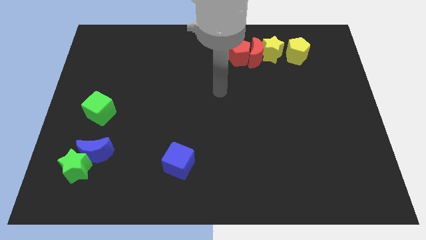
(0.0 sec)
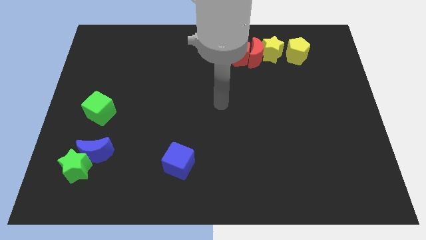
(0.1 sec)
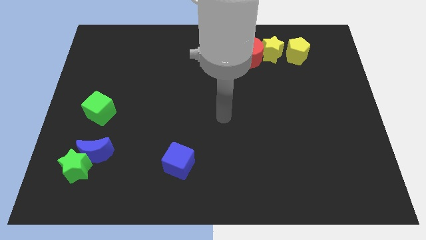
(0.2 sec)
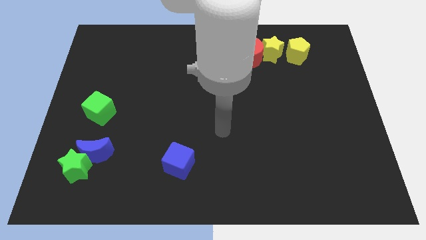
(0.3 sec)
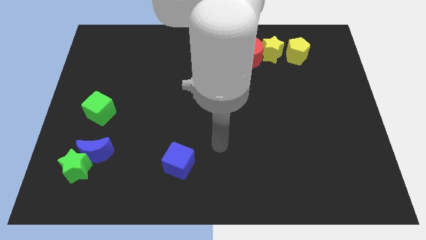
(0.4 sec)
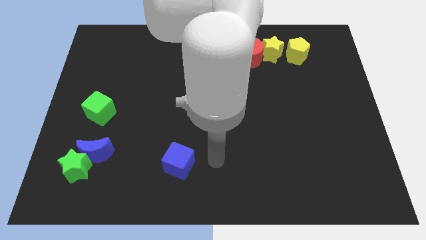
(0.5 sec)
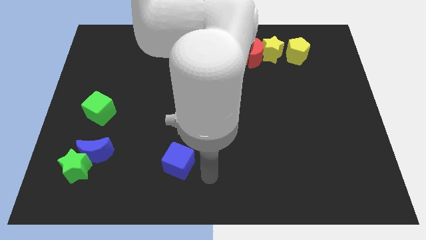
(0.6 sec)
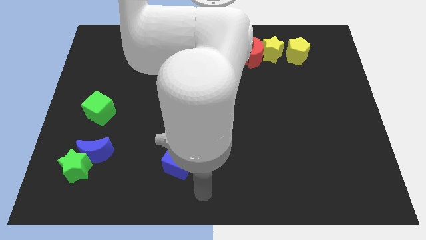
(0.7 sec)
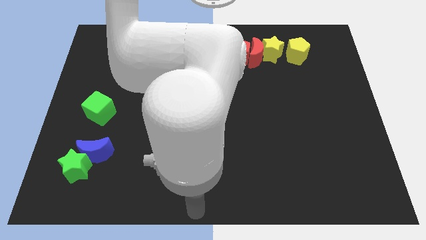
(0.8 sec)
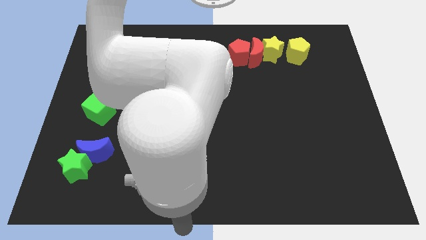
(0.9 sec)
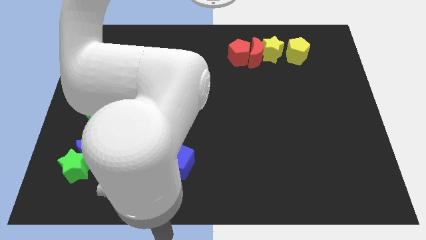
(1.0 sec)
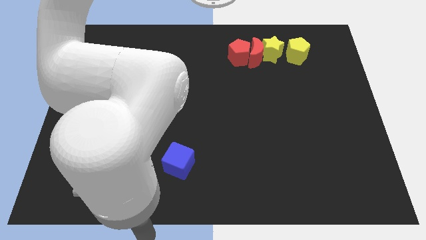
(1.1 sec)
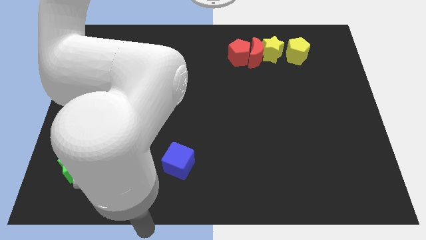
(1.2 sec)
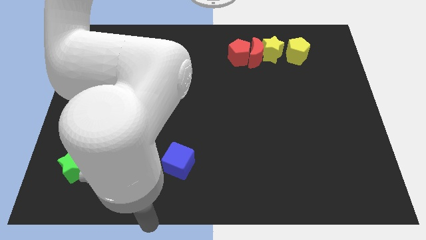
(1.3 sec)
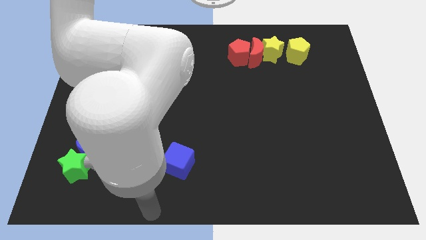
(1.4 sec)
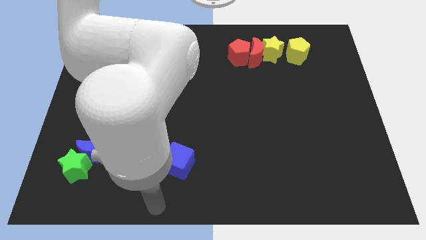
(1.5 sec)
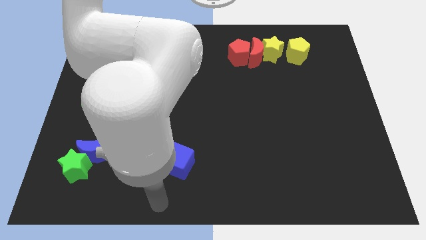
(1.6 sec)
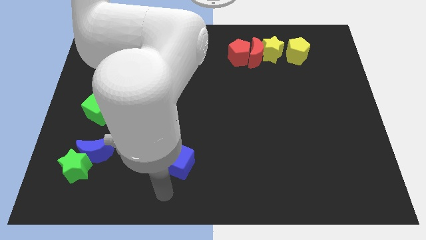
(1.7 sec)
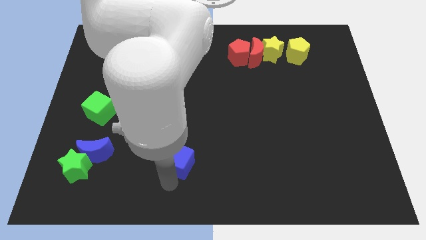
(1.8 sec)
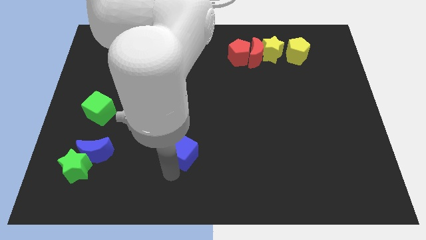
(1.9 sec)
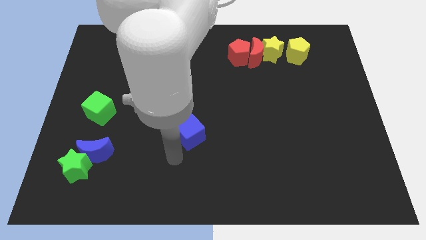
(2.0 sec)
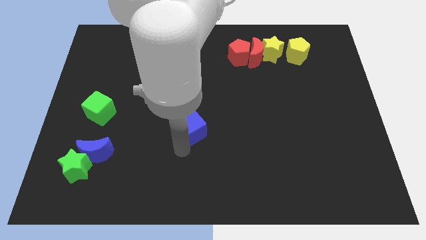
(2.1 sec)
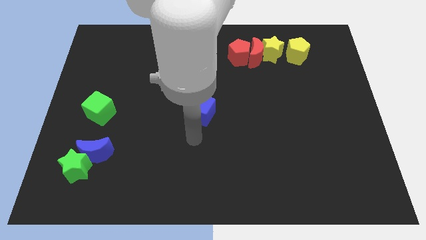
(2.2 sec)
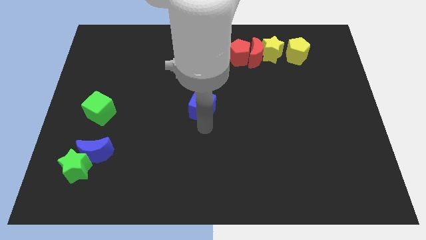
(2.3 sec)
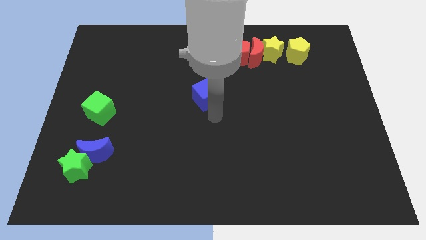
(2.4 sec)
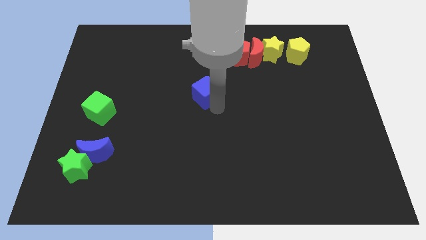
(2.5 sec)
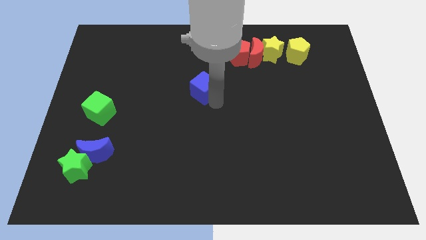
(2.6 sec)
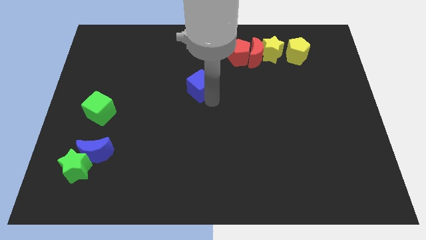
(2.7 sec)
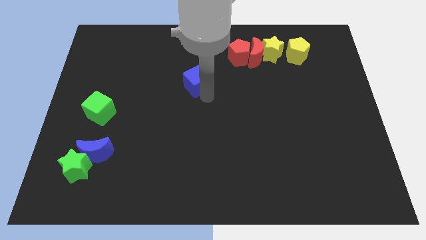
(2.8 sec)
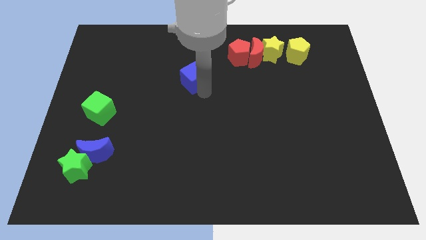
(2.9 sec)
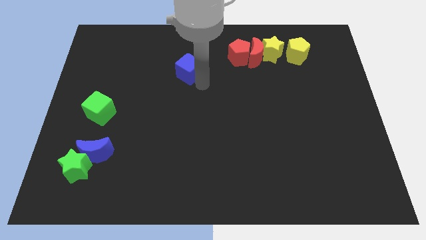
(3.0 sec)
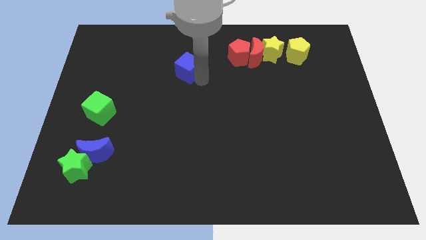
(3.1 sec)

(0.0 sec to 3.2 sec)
move the blue cube towards top

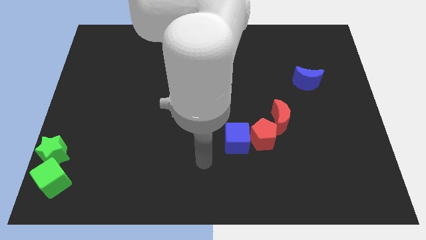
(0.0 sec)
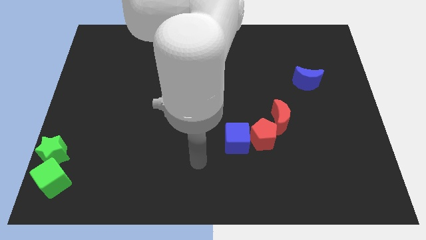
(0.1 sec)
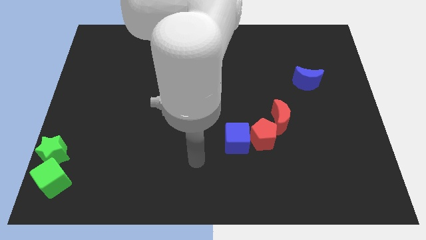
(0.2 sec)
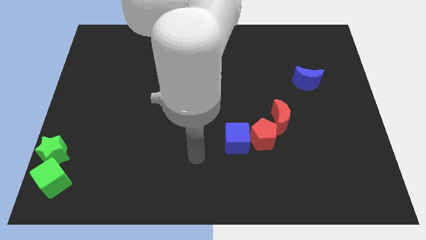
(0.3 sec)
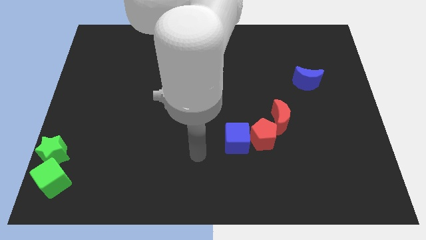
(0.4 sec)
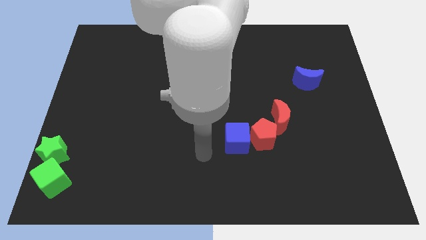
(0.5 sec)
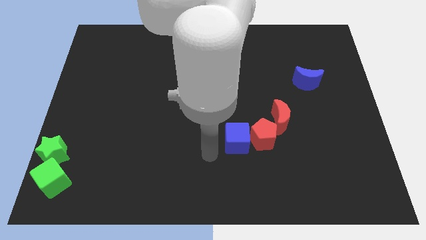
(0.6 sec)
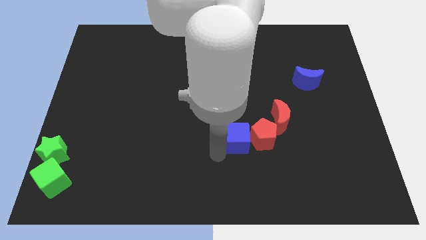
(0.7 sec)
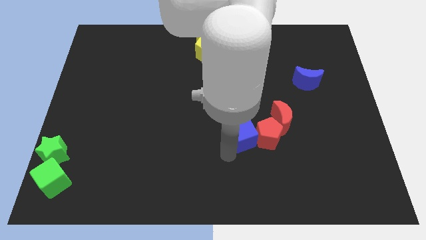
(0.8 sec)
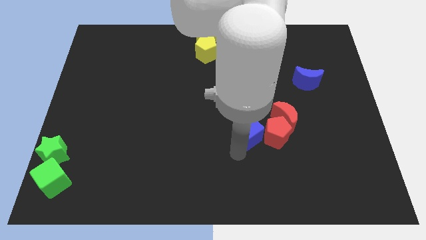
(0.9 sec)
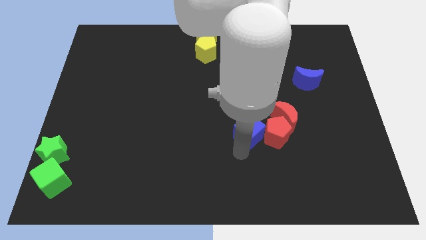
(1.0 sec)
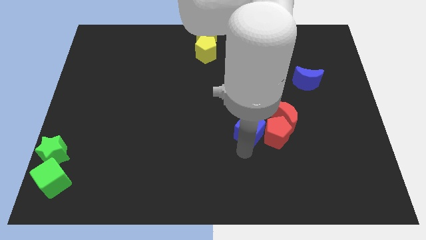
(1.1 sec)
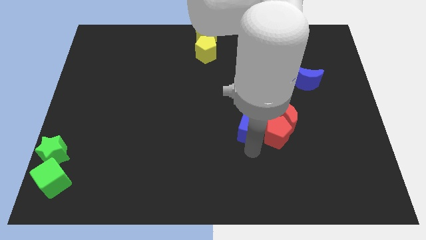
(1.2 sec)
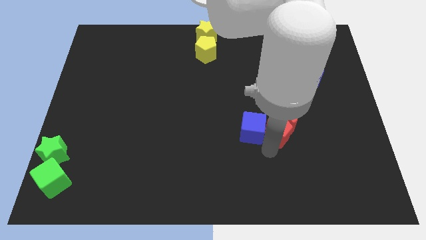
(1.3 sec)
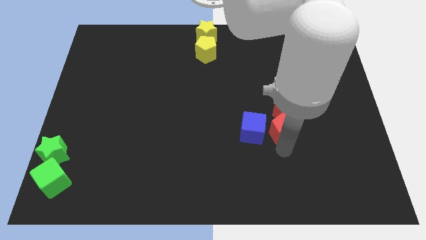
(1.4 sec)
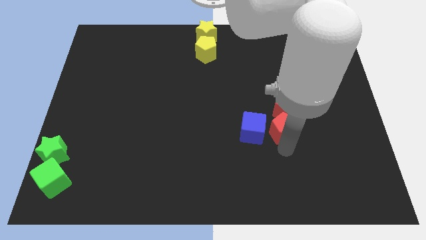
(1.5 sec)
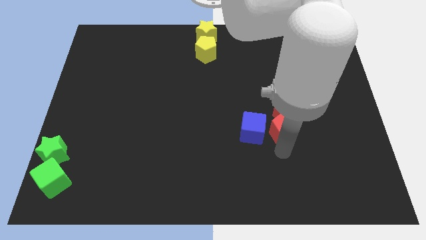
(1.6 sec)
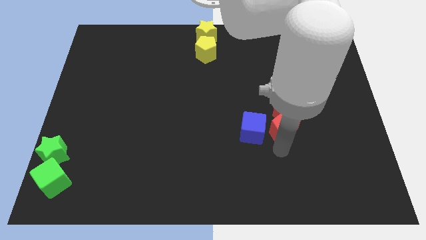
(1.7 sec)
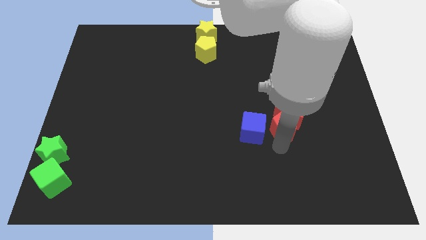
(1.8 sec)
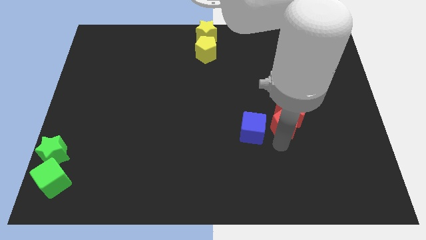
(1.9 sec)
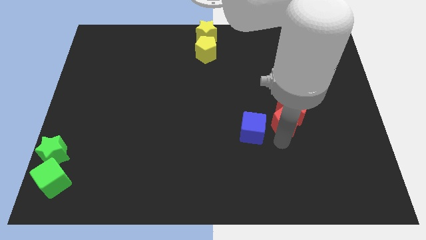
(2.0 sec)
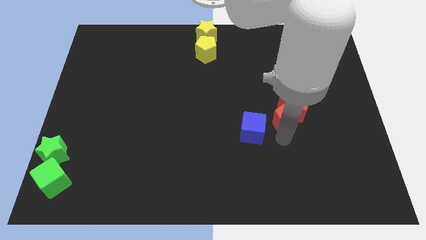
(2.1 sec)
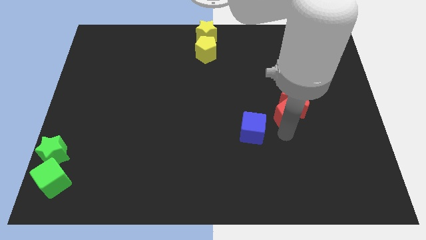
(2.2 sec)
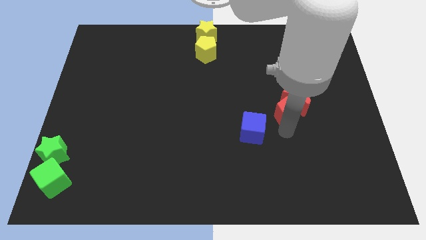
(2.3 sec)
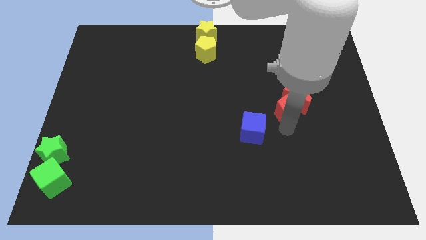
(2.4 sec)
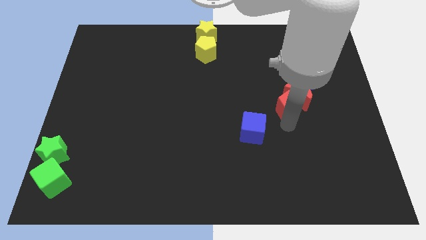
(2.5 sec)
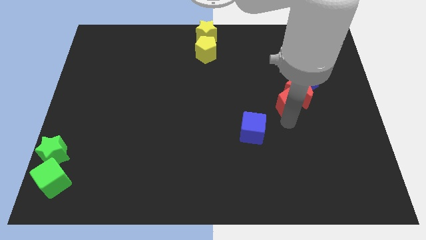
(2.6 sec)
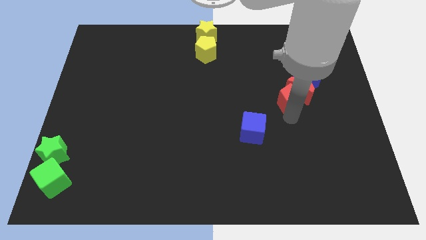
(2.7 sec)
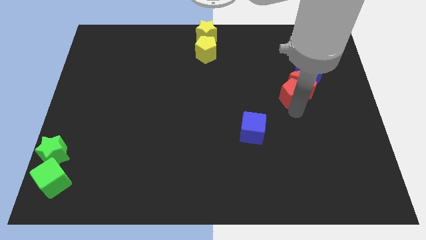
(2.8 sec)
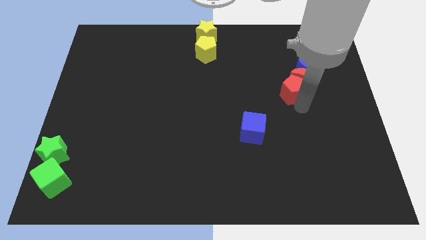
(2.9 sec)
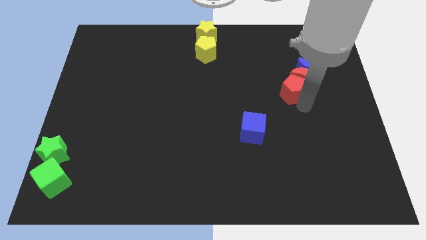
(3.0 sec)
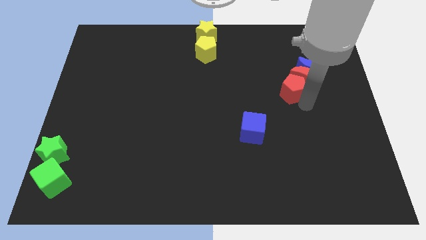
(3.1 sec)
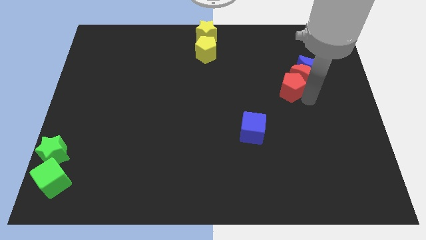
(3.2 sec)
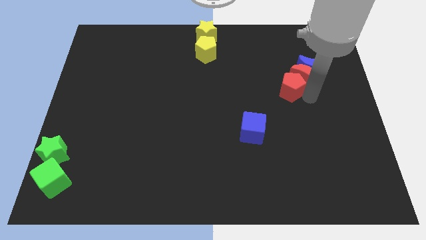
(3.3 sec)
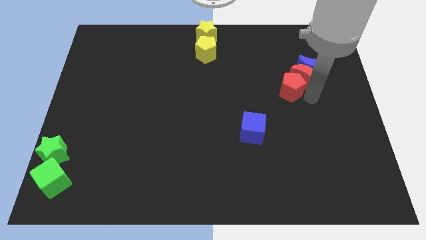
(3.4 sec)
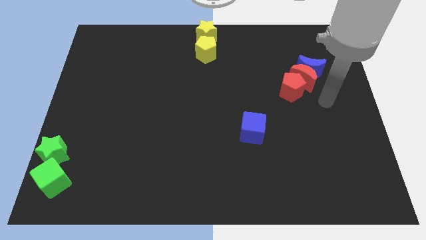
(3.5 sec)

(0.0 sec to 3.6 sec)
push blue cube slightly to the center move red pentagon towards top right

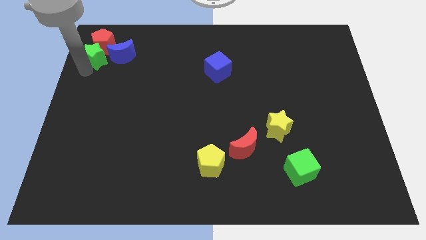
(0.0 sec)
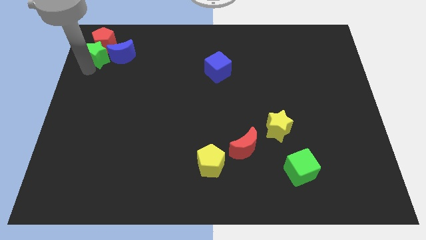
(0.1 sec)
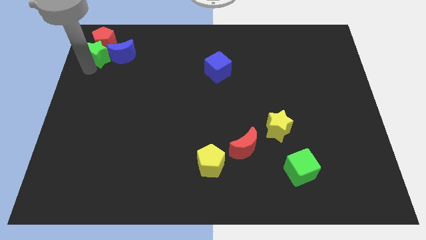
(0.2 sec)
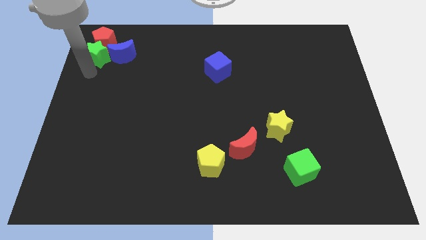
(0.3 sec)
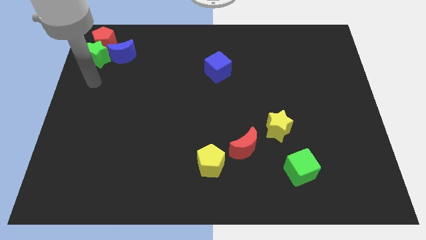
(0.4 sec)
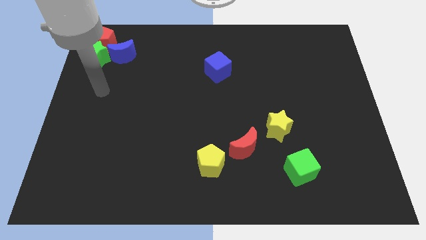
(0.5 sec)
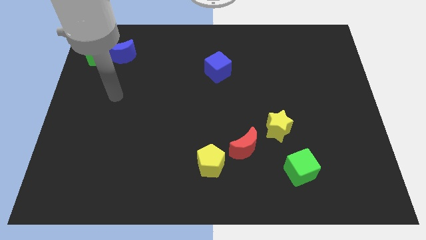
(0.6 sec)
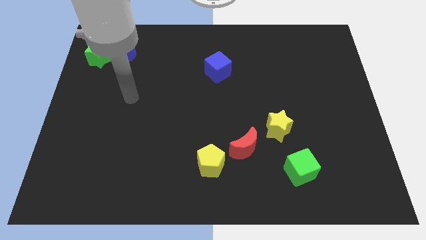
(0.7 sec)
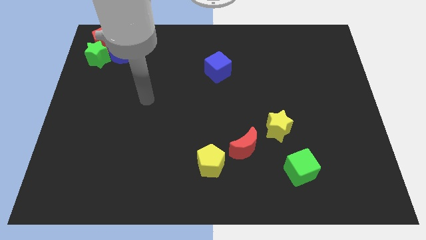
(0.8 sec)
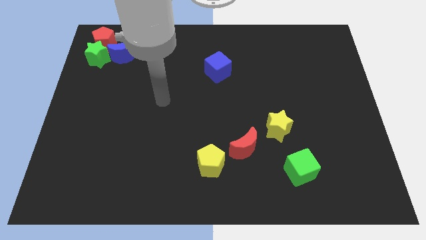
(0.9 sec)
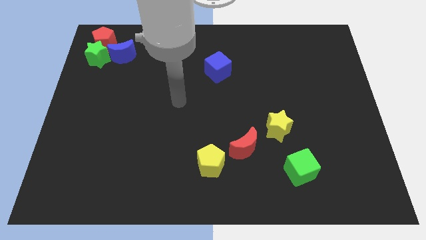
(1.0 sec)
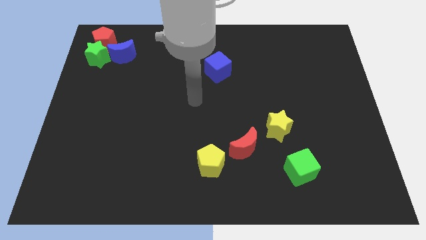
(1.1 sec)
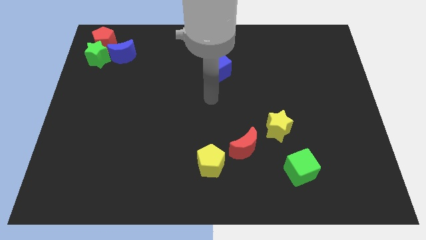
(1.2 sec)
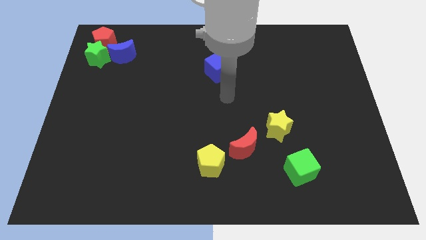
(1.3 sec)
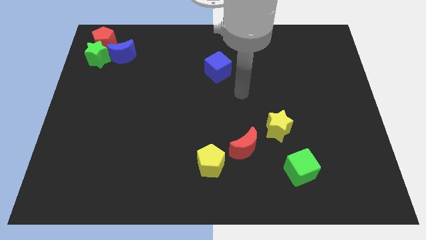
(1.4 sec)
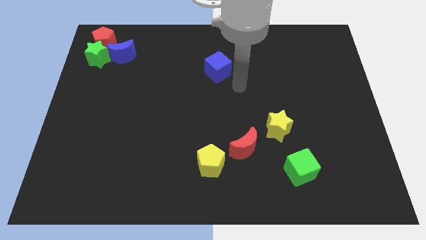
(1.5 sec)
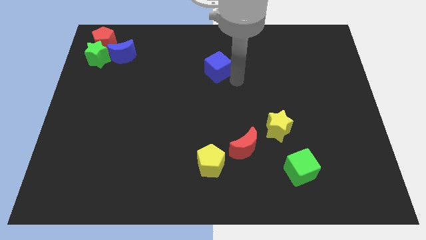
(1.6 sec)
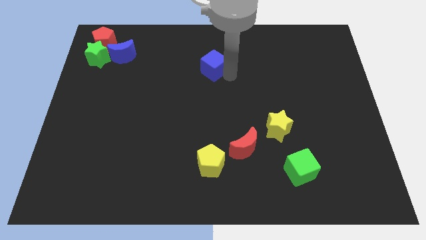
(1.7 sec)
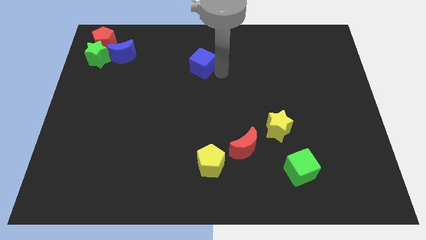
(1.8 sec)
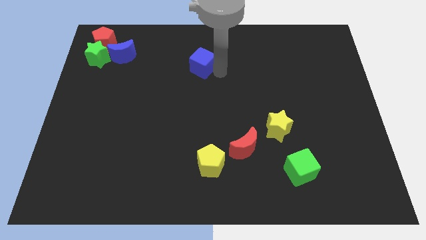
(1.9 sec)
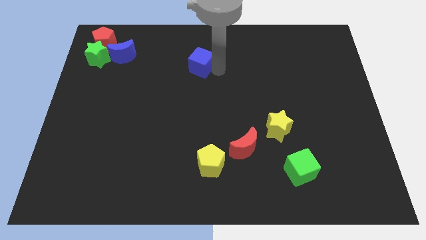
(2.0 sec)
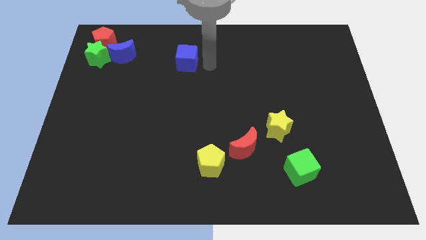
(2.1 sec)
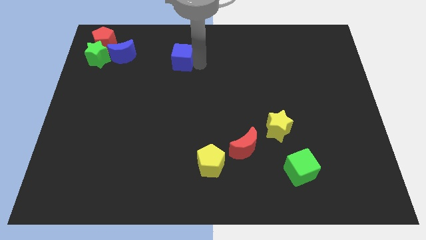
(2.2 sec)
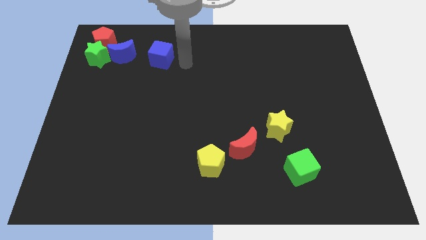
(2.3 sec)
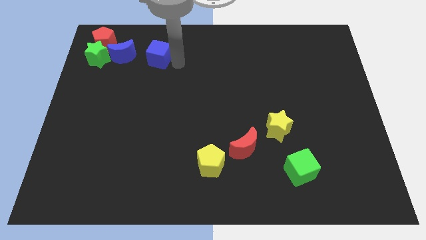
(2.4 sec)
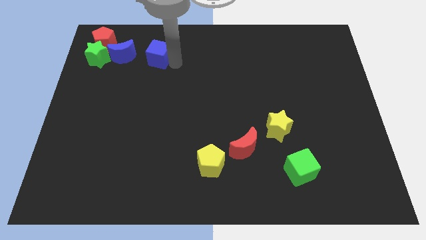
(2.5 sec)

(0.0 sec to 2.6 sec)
move the blue cube towards the blue semi circle
